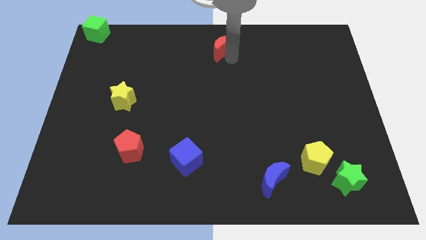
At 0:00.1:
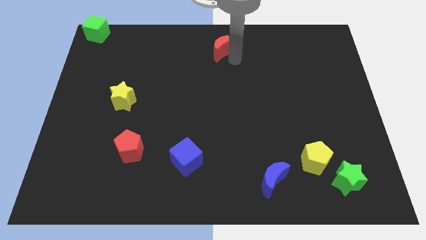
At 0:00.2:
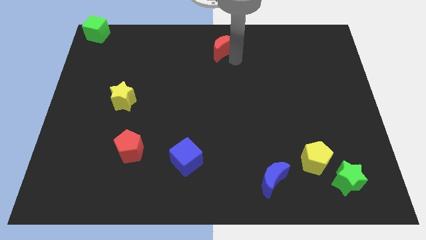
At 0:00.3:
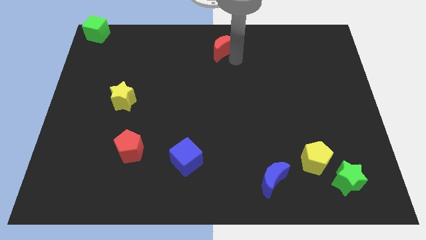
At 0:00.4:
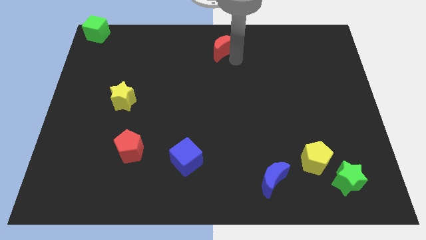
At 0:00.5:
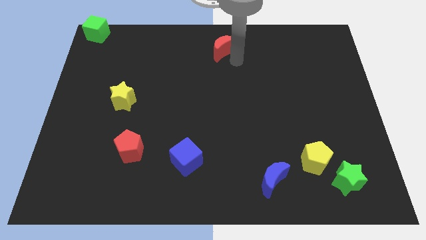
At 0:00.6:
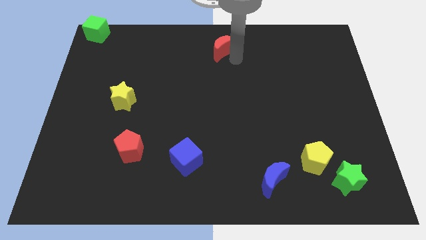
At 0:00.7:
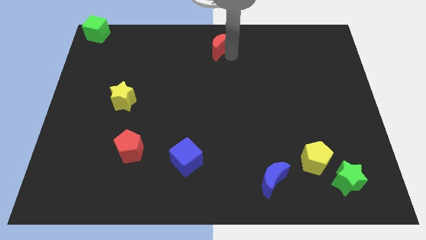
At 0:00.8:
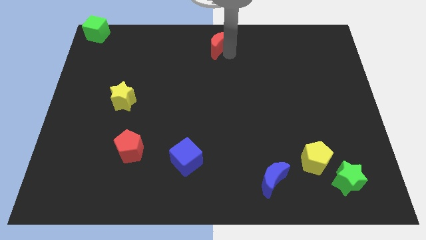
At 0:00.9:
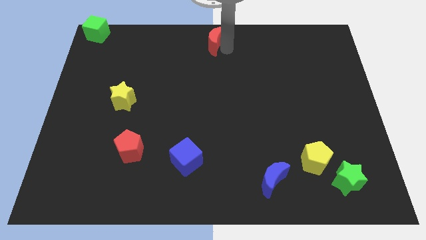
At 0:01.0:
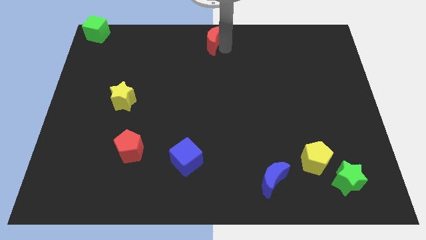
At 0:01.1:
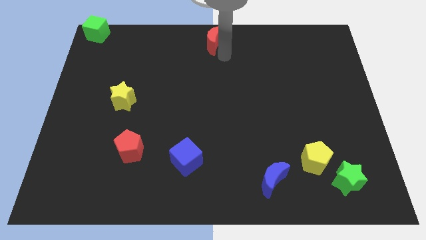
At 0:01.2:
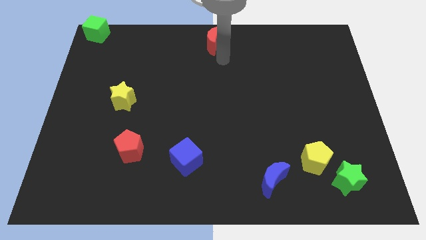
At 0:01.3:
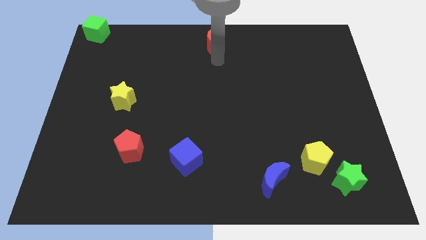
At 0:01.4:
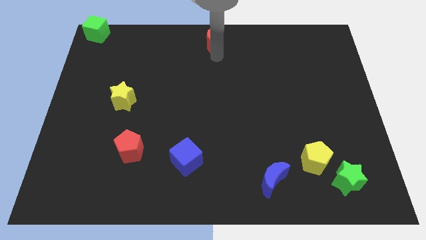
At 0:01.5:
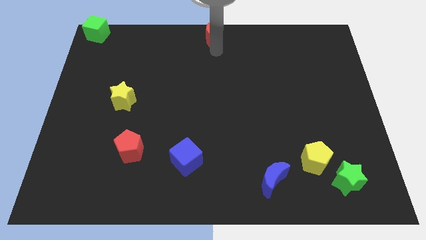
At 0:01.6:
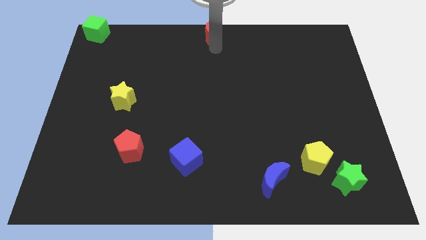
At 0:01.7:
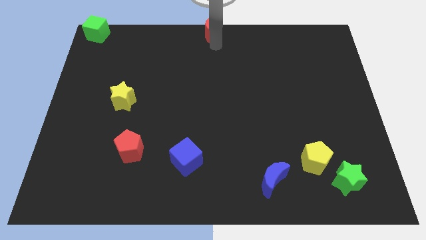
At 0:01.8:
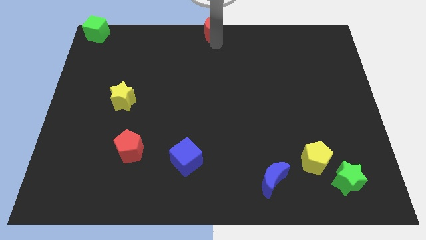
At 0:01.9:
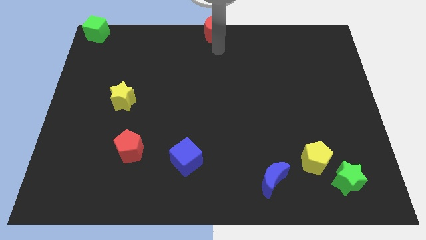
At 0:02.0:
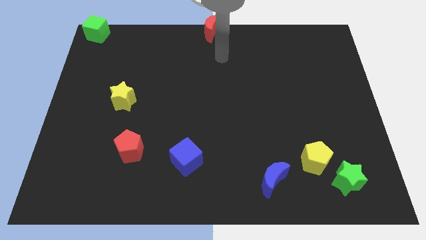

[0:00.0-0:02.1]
push the red moon to the top center of the board

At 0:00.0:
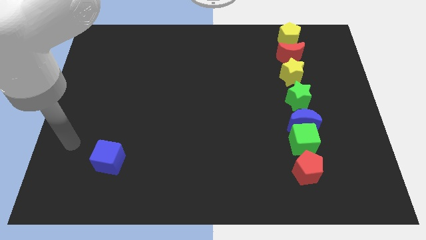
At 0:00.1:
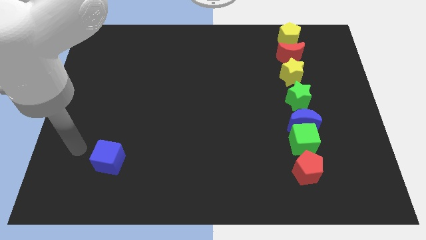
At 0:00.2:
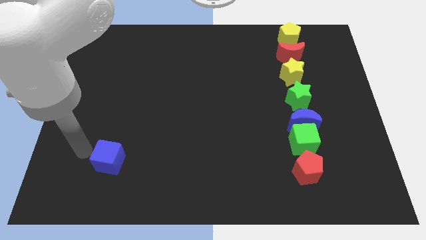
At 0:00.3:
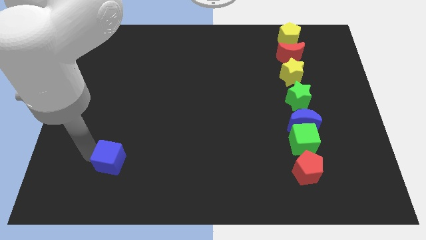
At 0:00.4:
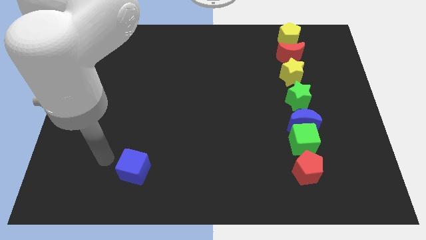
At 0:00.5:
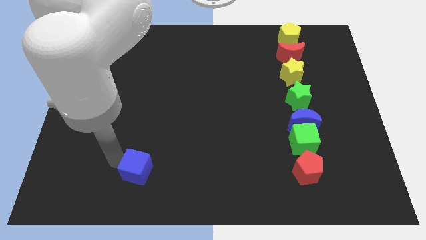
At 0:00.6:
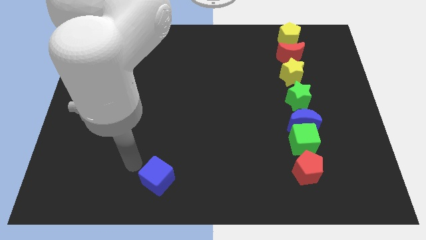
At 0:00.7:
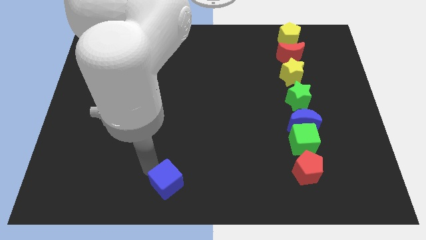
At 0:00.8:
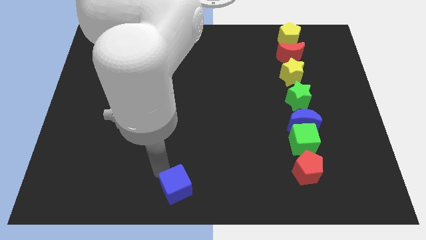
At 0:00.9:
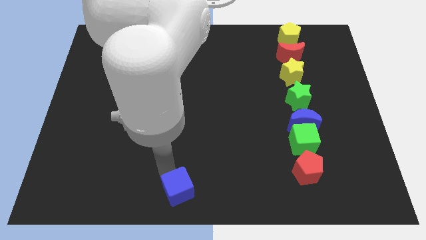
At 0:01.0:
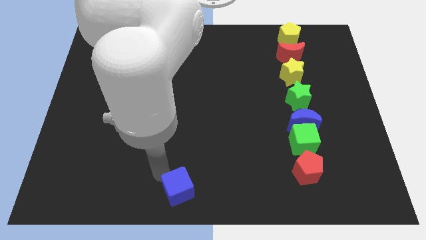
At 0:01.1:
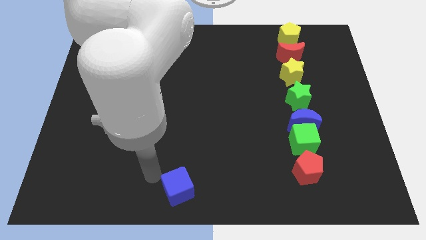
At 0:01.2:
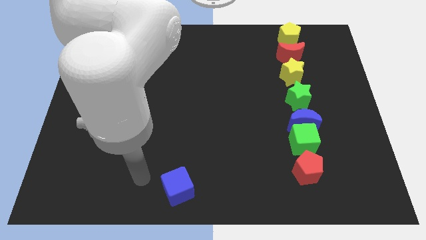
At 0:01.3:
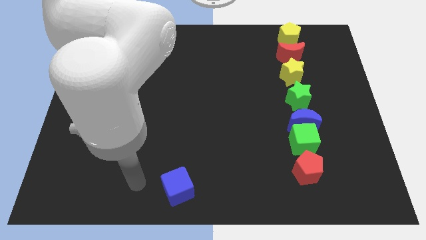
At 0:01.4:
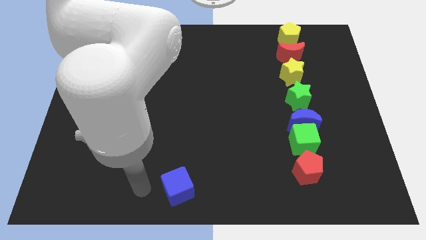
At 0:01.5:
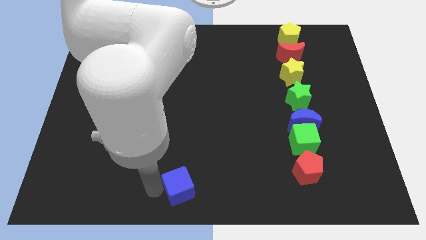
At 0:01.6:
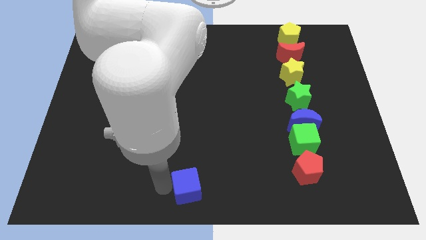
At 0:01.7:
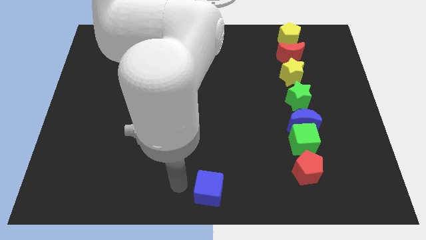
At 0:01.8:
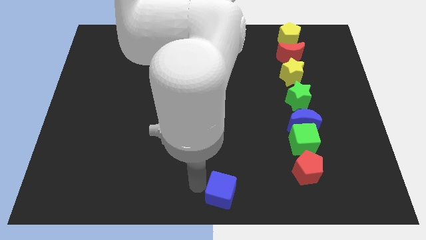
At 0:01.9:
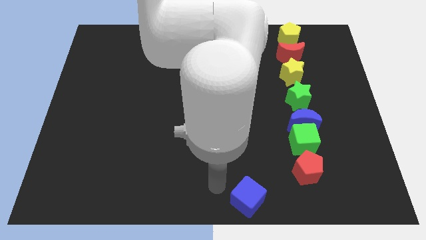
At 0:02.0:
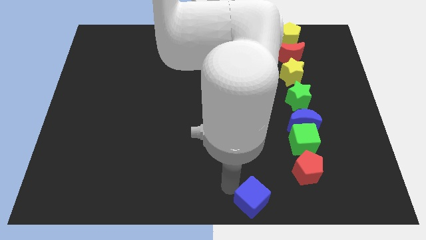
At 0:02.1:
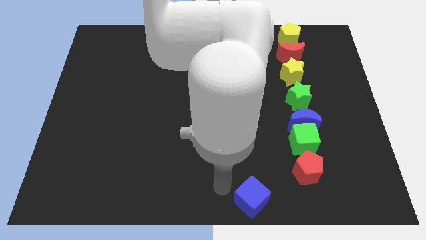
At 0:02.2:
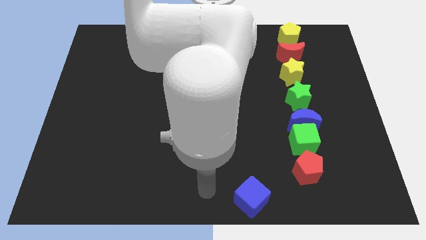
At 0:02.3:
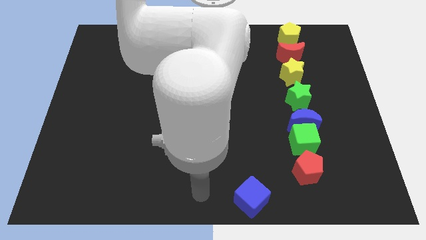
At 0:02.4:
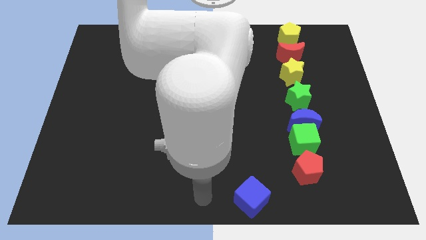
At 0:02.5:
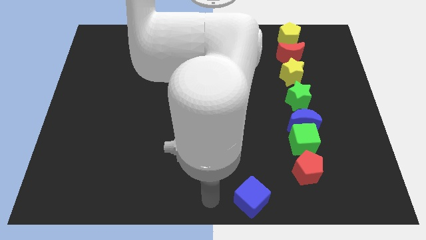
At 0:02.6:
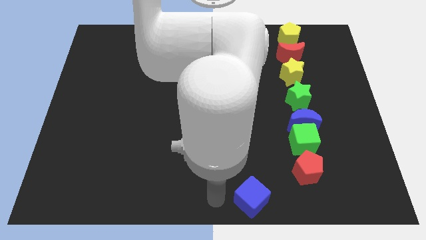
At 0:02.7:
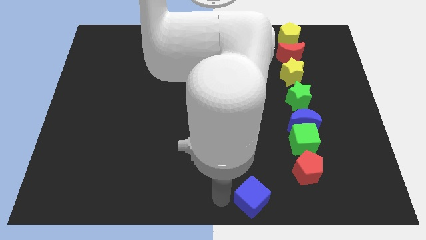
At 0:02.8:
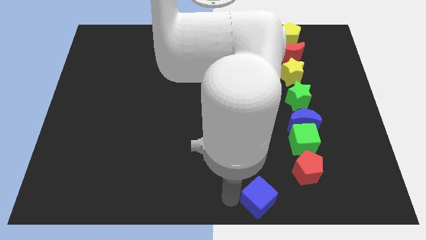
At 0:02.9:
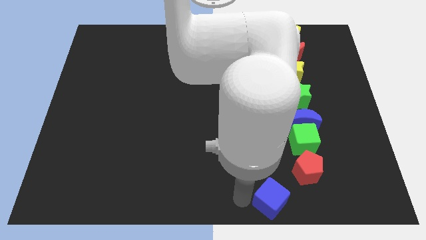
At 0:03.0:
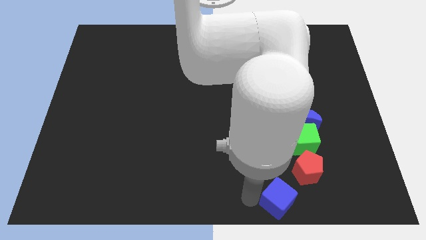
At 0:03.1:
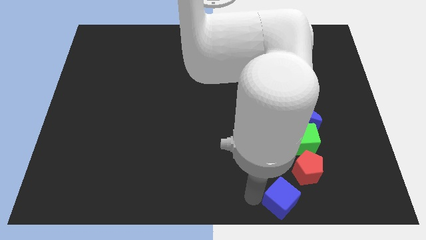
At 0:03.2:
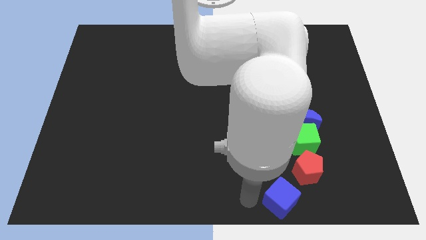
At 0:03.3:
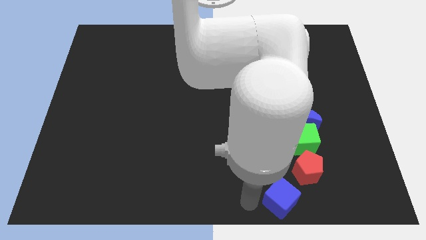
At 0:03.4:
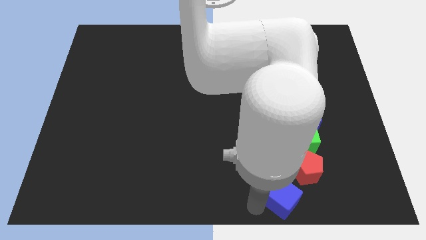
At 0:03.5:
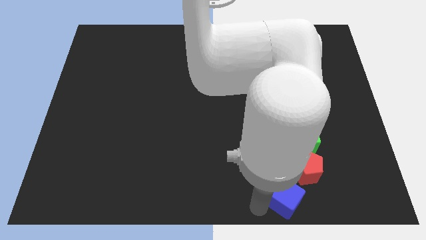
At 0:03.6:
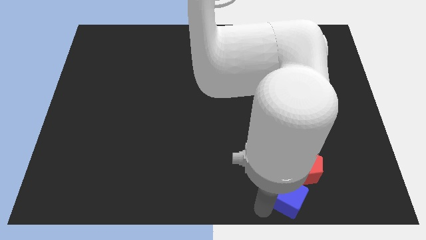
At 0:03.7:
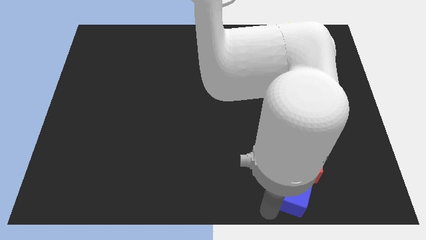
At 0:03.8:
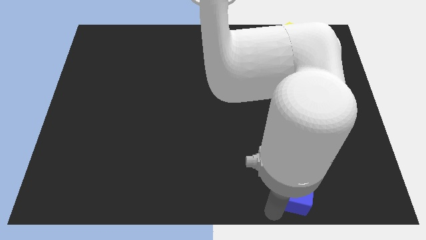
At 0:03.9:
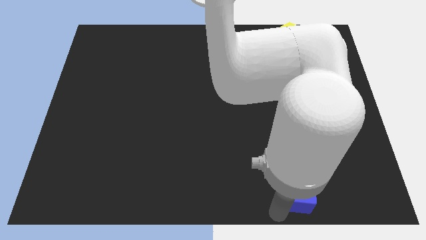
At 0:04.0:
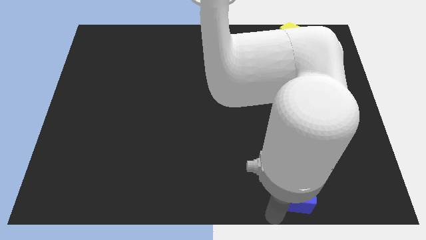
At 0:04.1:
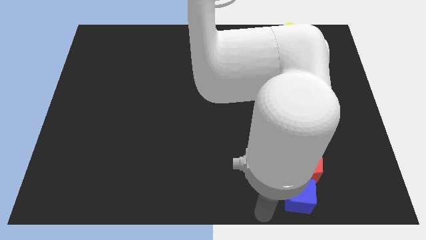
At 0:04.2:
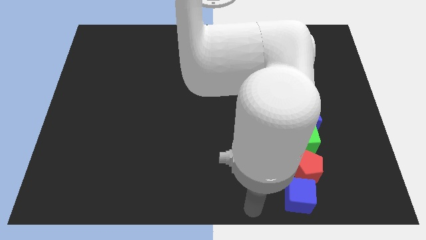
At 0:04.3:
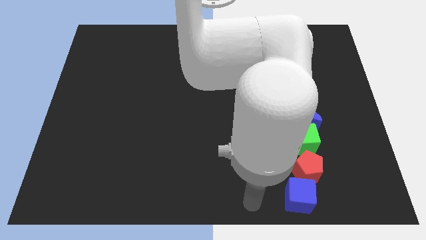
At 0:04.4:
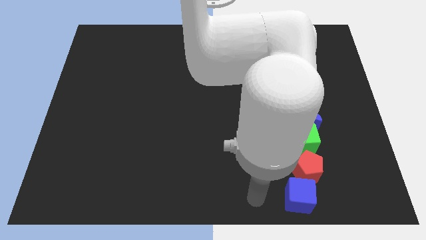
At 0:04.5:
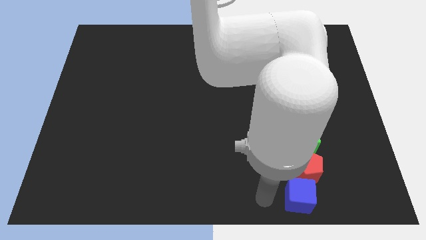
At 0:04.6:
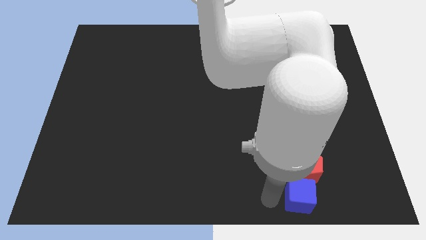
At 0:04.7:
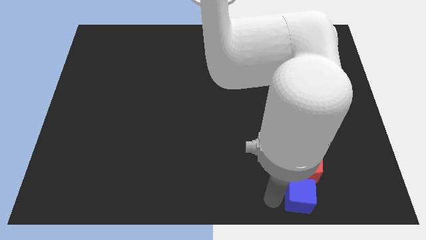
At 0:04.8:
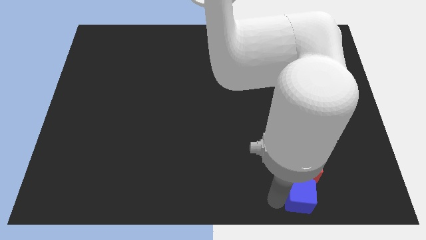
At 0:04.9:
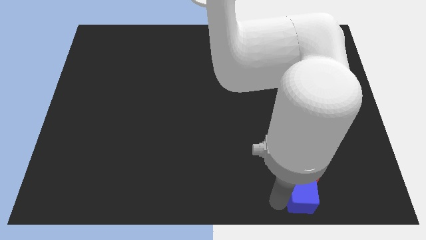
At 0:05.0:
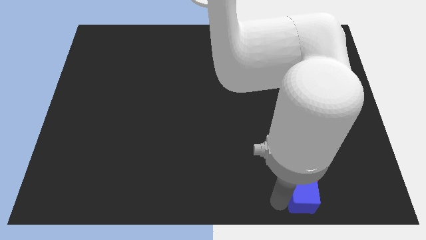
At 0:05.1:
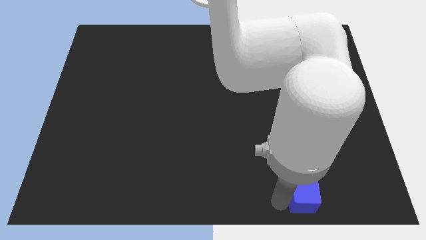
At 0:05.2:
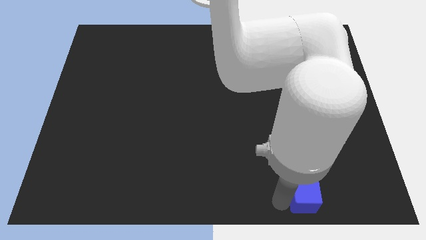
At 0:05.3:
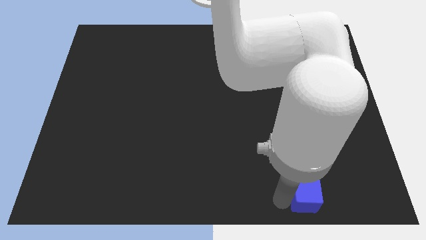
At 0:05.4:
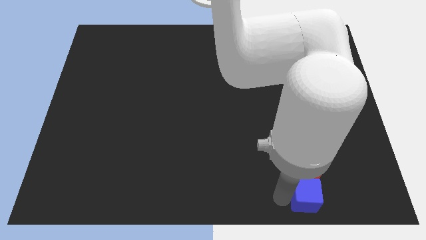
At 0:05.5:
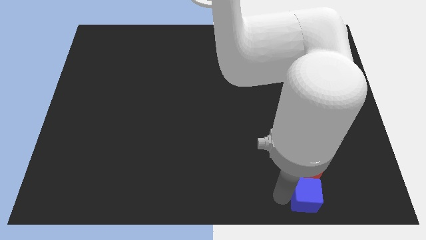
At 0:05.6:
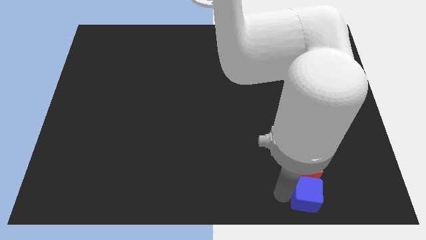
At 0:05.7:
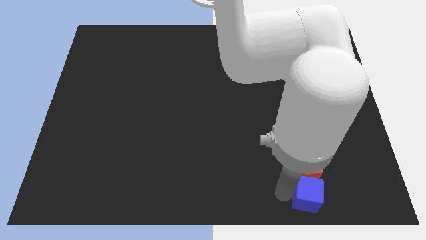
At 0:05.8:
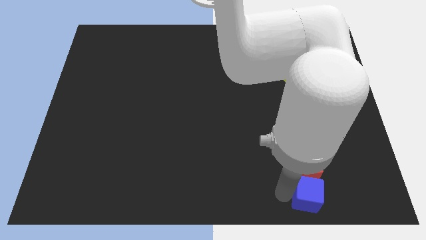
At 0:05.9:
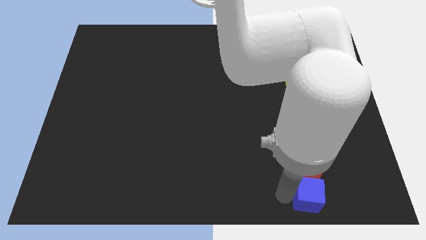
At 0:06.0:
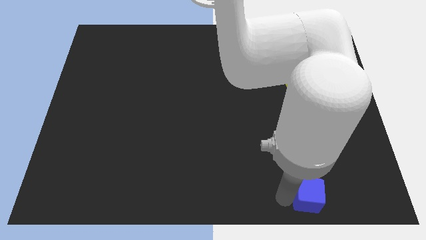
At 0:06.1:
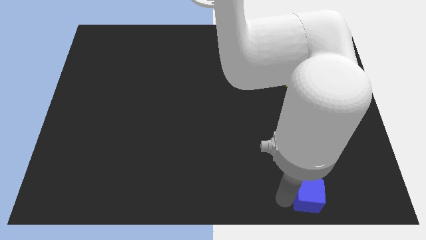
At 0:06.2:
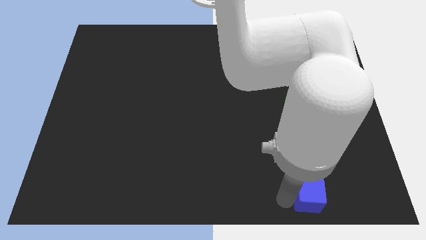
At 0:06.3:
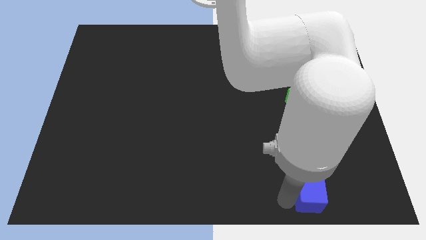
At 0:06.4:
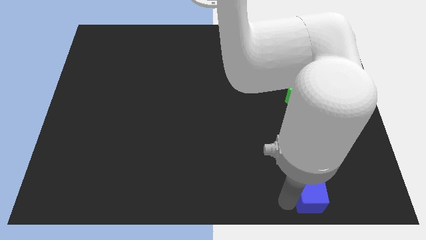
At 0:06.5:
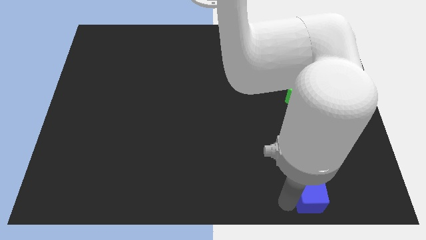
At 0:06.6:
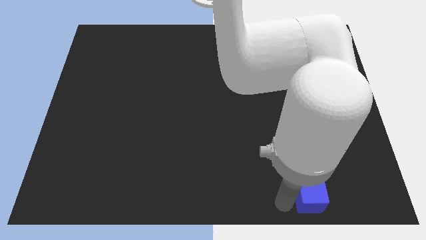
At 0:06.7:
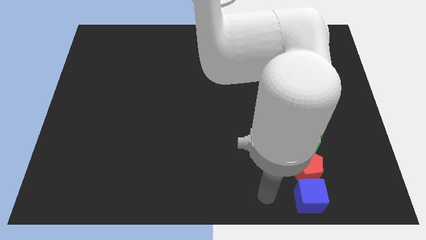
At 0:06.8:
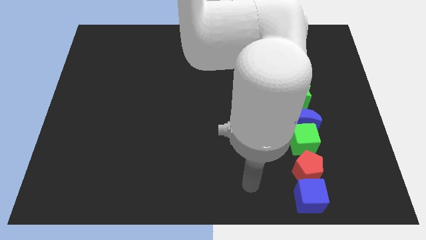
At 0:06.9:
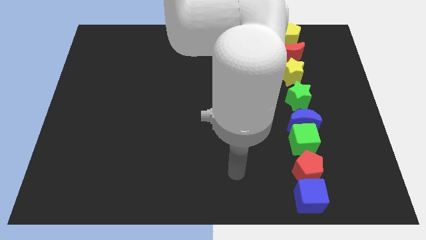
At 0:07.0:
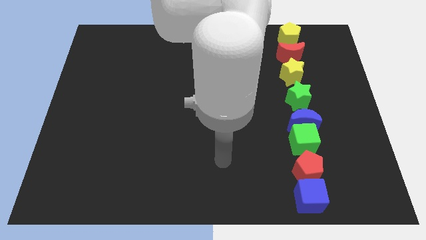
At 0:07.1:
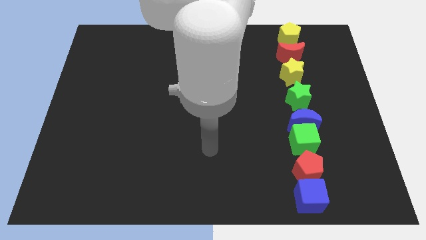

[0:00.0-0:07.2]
place the blue cube below the red pentagon to form a vertical line with a group of blocks
